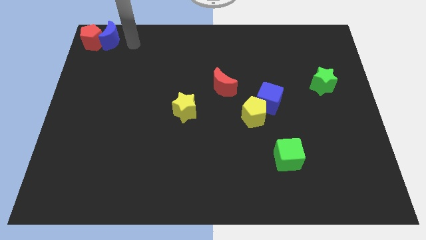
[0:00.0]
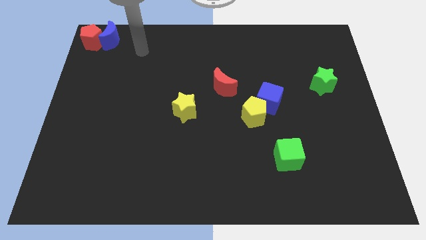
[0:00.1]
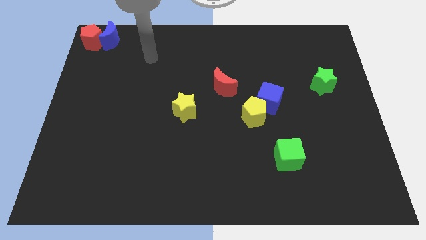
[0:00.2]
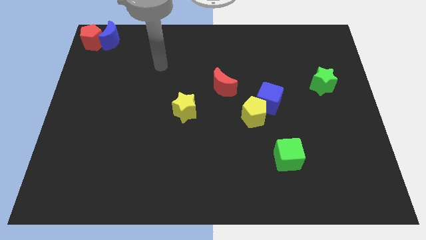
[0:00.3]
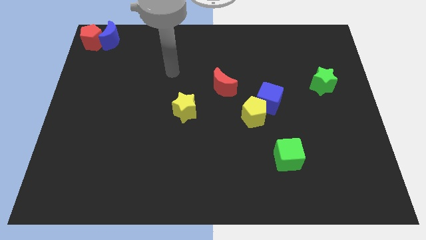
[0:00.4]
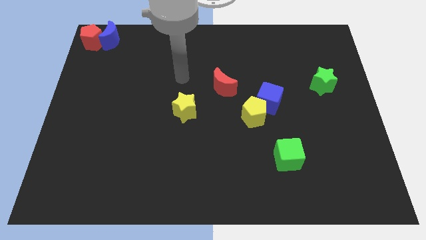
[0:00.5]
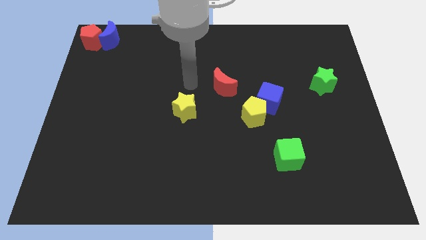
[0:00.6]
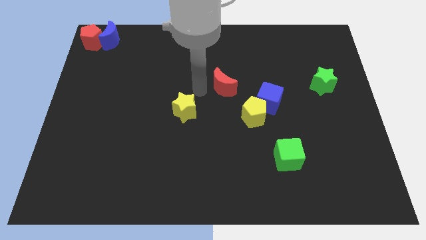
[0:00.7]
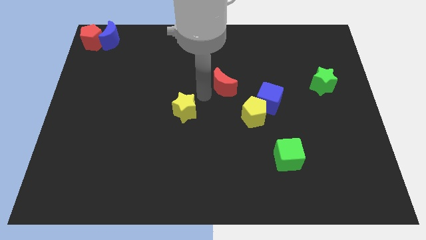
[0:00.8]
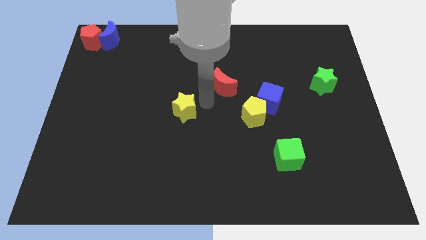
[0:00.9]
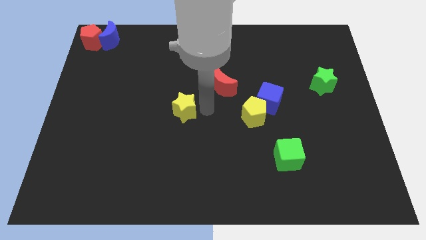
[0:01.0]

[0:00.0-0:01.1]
point your arm at the right of the yellow star

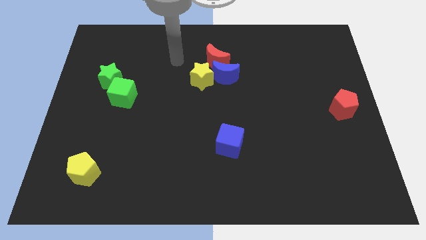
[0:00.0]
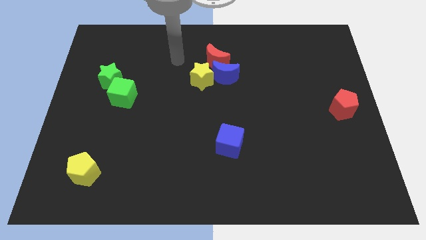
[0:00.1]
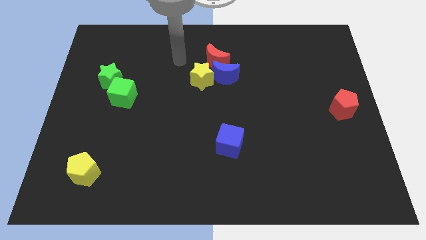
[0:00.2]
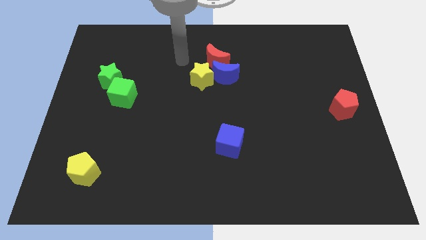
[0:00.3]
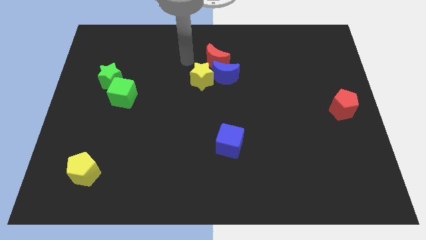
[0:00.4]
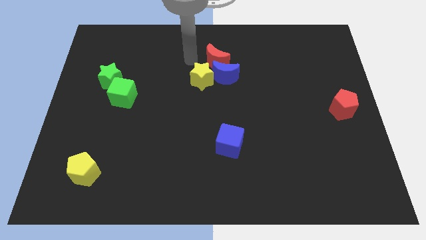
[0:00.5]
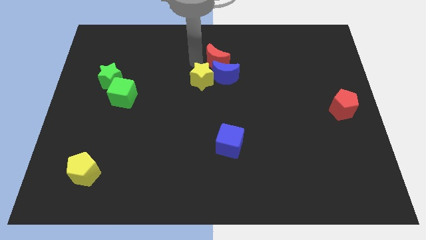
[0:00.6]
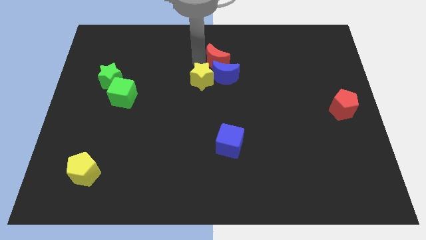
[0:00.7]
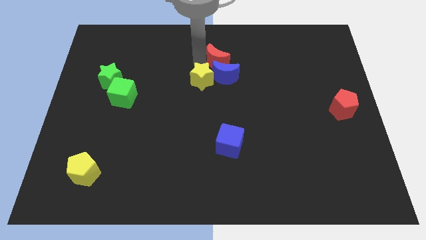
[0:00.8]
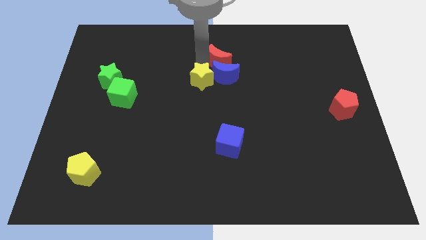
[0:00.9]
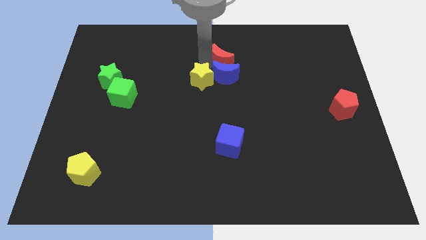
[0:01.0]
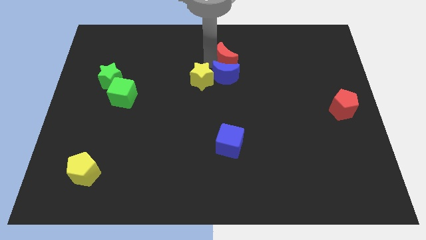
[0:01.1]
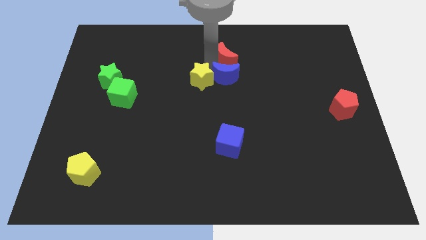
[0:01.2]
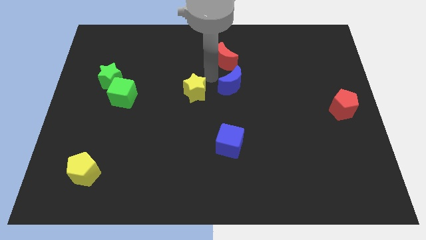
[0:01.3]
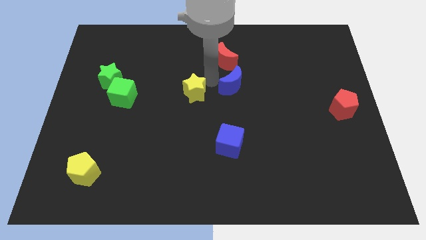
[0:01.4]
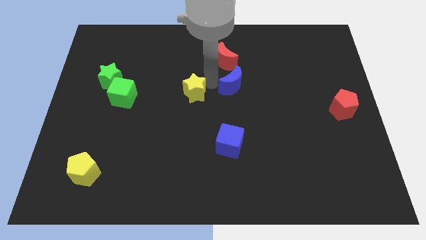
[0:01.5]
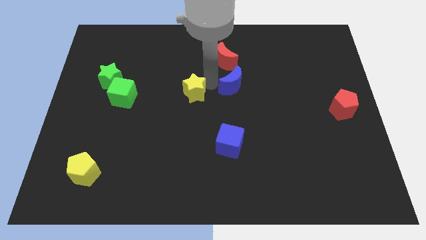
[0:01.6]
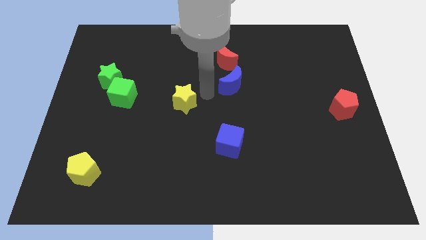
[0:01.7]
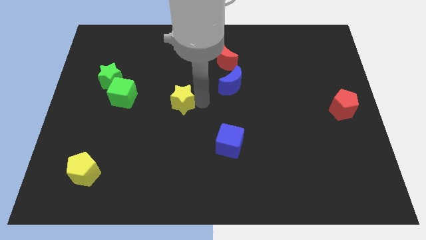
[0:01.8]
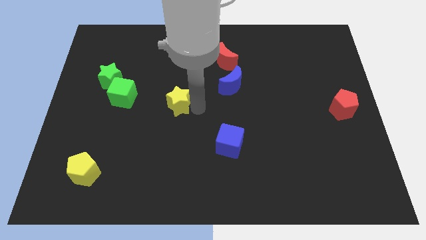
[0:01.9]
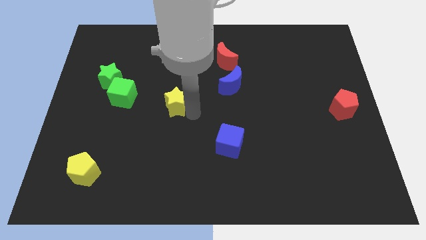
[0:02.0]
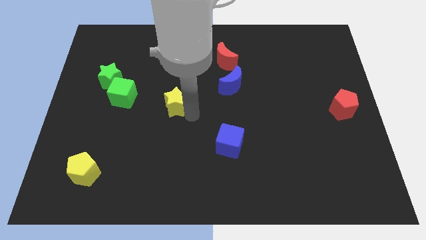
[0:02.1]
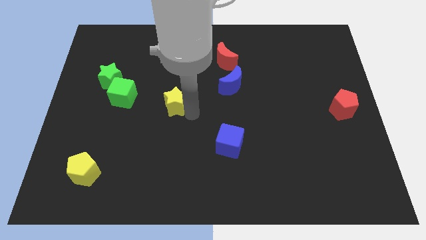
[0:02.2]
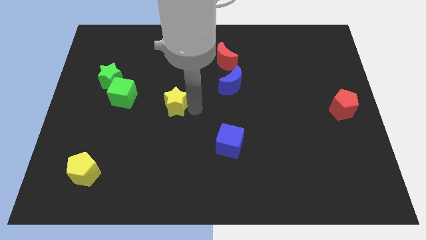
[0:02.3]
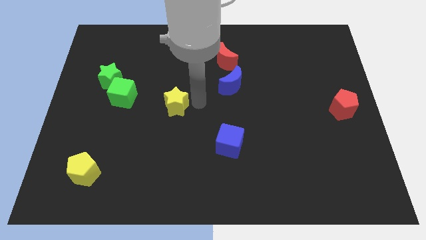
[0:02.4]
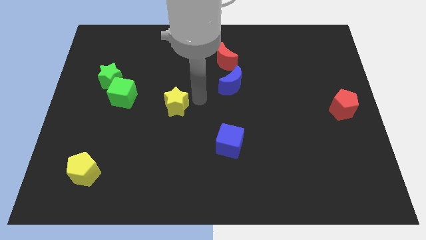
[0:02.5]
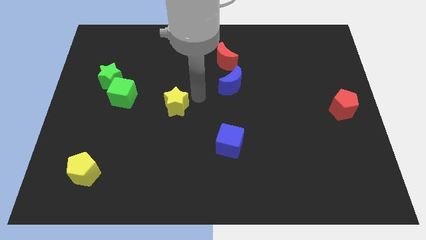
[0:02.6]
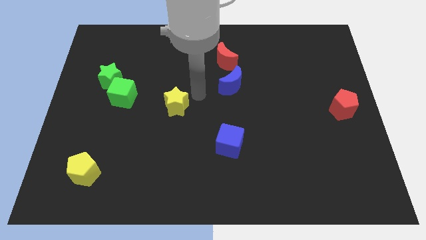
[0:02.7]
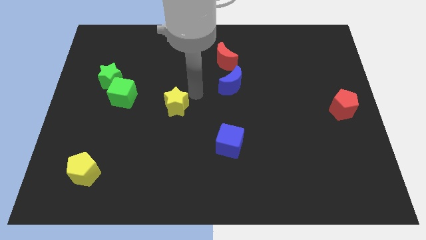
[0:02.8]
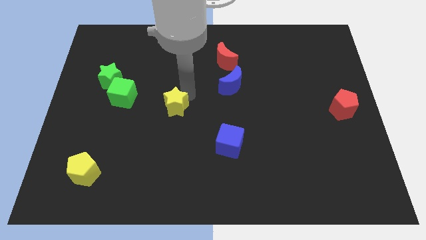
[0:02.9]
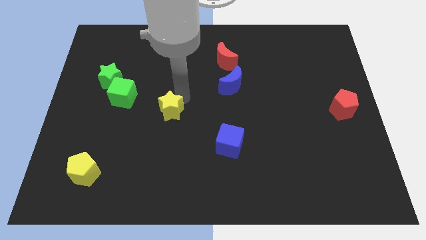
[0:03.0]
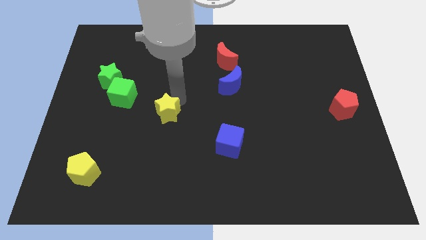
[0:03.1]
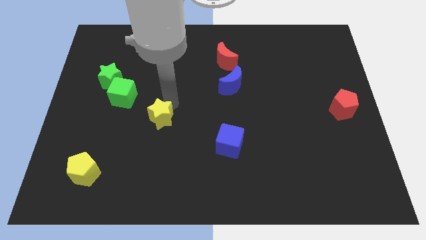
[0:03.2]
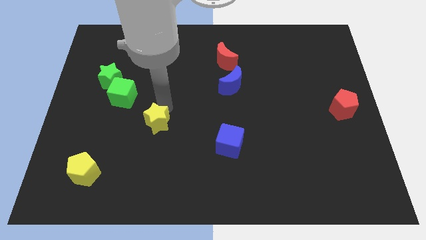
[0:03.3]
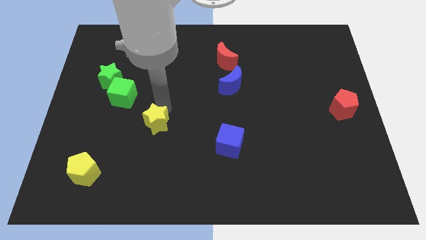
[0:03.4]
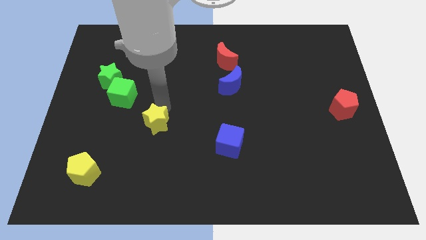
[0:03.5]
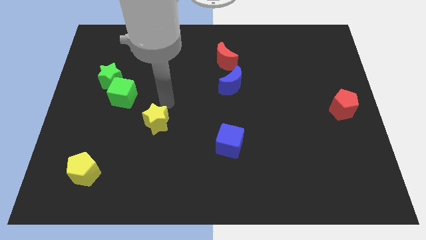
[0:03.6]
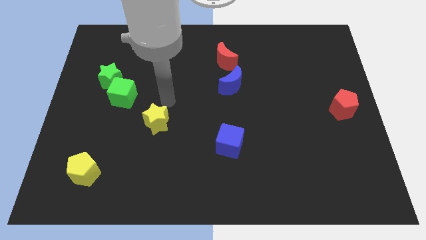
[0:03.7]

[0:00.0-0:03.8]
slide the yellow star away from the blue and the red moon

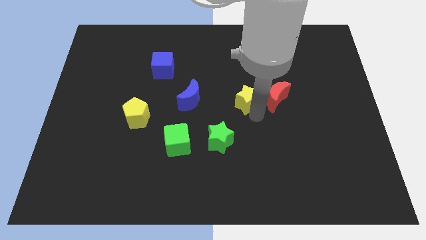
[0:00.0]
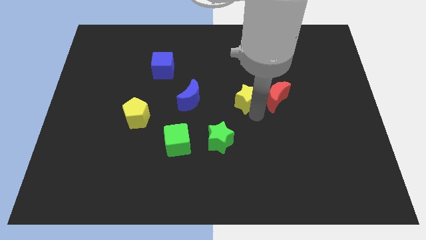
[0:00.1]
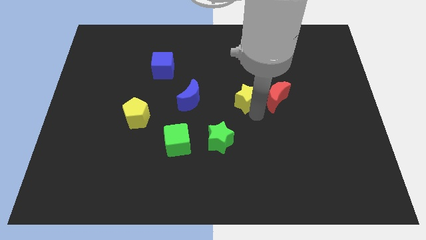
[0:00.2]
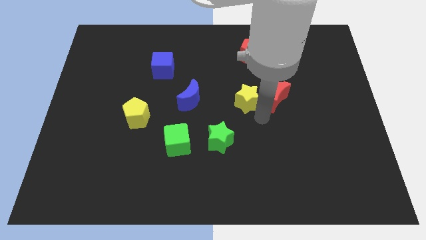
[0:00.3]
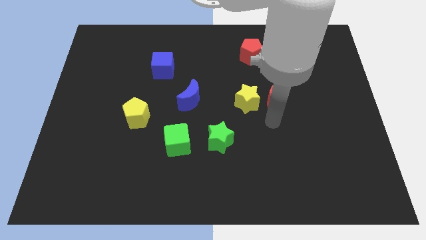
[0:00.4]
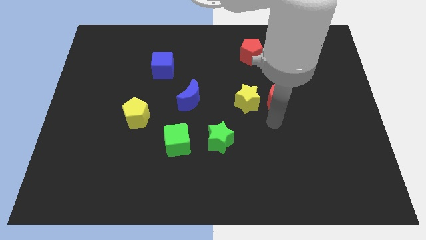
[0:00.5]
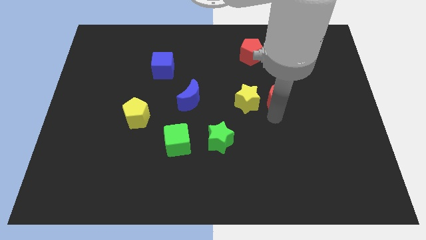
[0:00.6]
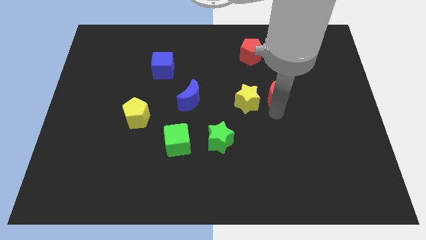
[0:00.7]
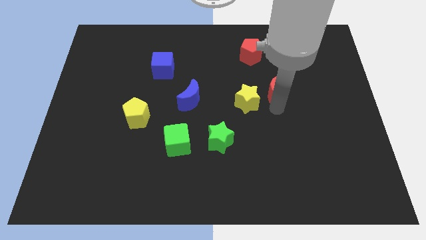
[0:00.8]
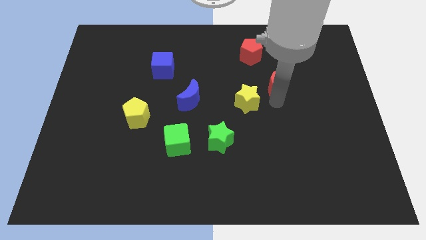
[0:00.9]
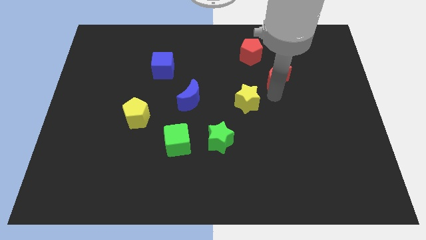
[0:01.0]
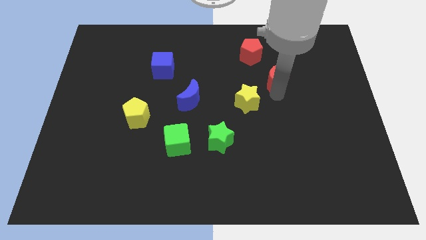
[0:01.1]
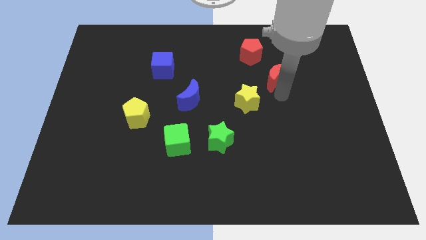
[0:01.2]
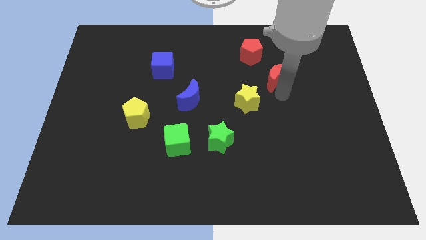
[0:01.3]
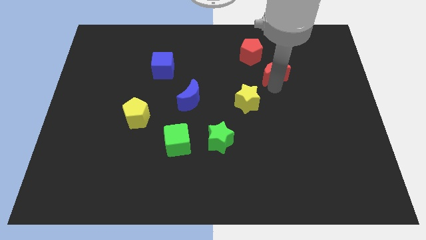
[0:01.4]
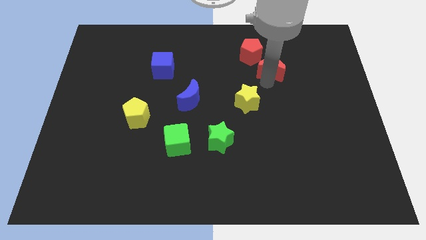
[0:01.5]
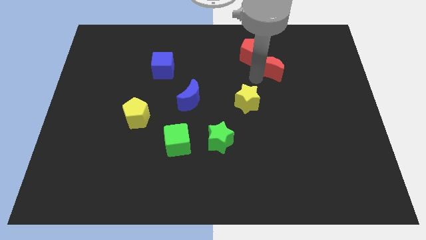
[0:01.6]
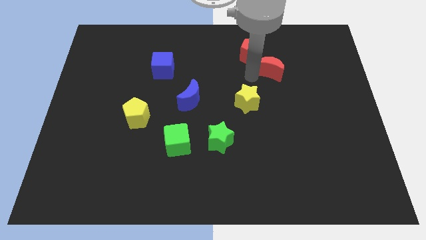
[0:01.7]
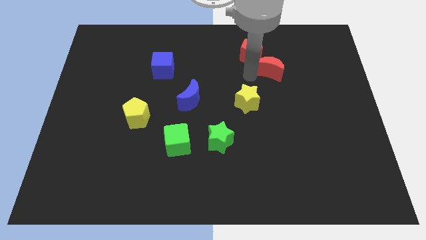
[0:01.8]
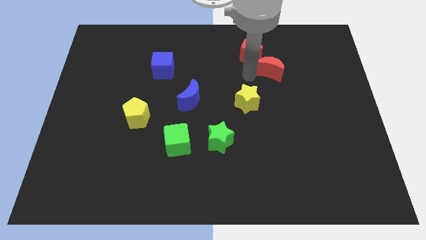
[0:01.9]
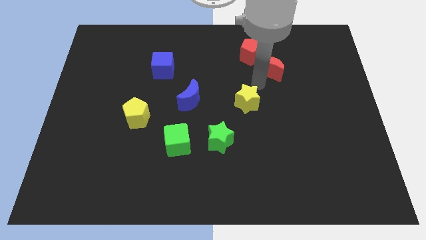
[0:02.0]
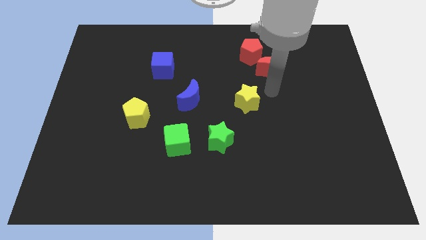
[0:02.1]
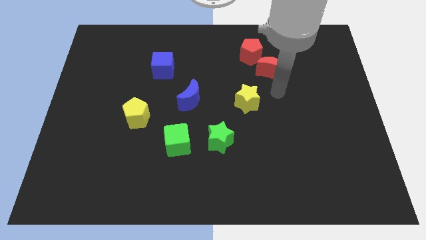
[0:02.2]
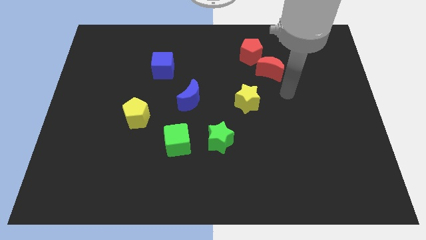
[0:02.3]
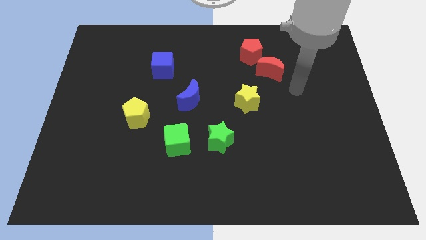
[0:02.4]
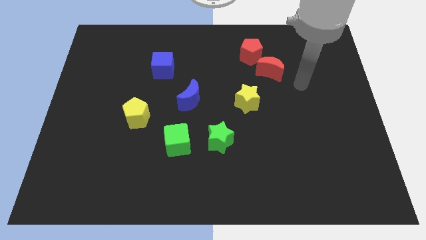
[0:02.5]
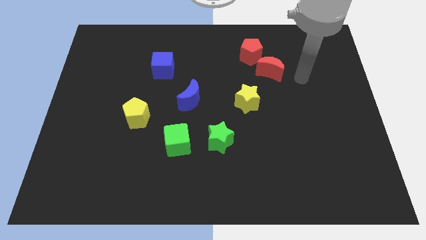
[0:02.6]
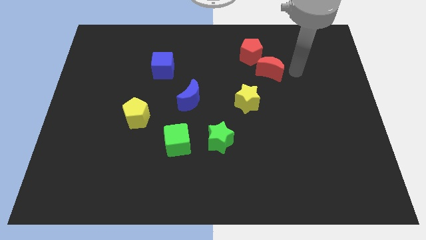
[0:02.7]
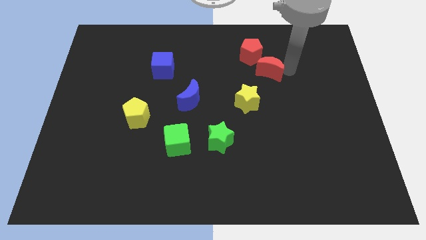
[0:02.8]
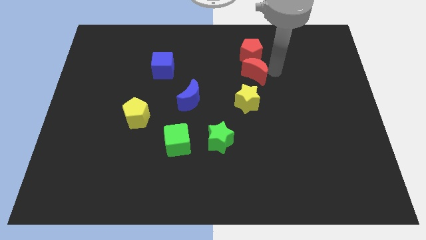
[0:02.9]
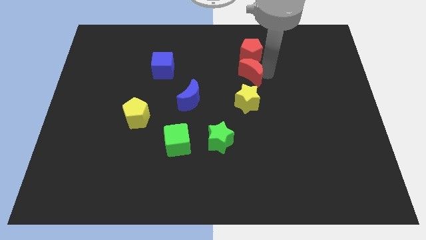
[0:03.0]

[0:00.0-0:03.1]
slide the red crescent to the bottom of the red pentagon

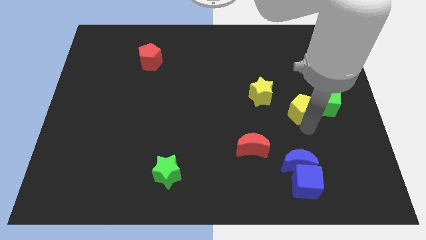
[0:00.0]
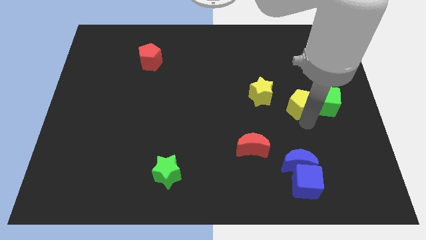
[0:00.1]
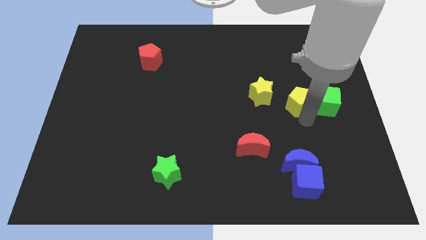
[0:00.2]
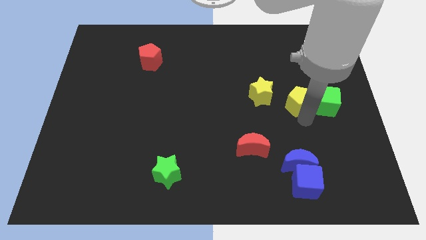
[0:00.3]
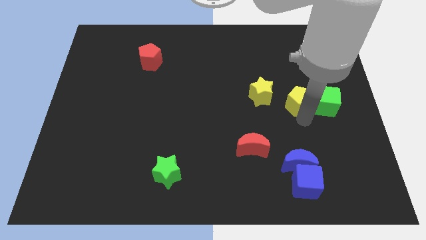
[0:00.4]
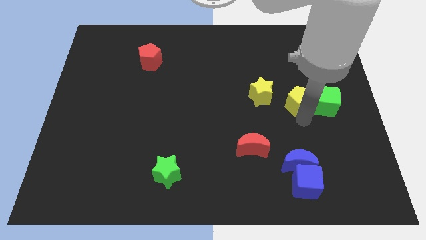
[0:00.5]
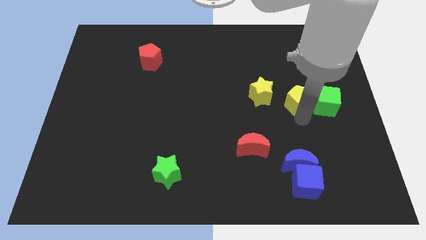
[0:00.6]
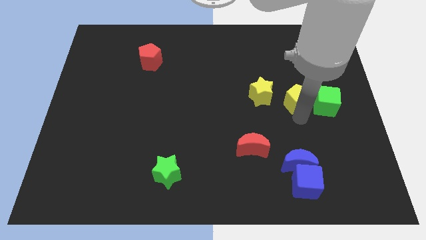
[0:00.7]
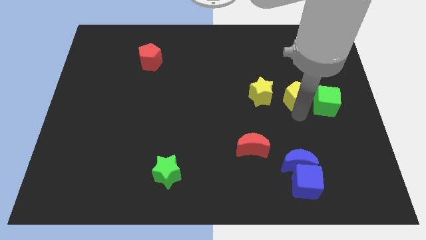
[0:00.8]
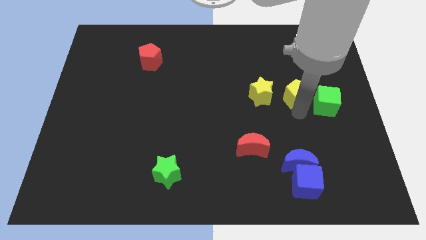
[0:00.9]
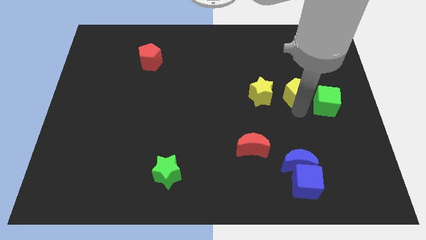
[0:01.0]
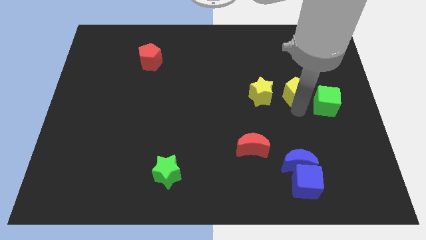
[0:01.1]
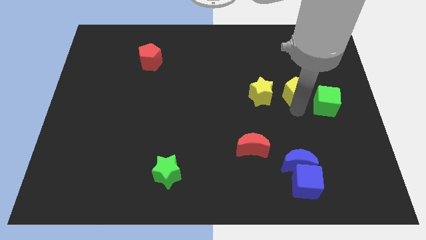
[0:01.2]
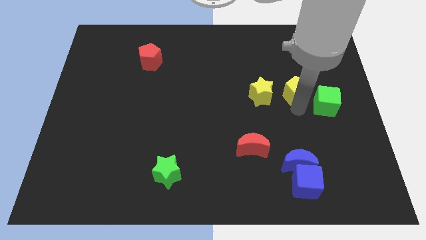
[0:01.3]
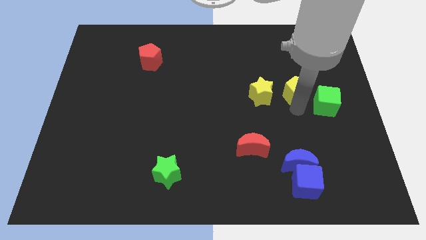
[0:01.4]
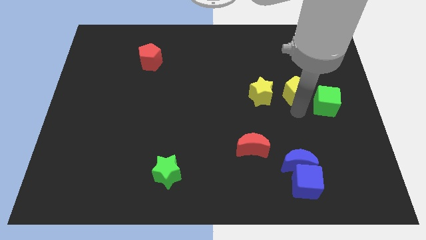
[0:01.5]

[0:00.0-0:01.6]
place the yellow pentagon in between the yellow star and green cube
